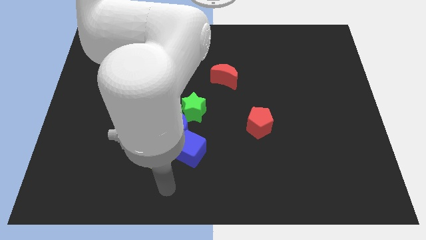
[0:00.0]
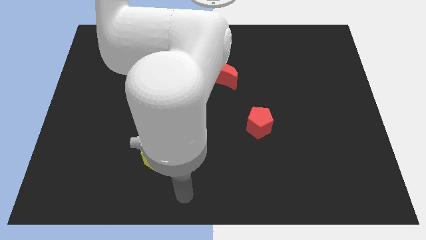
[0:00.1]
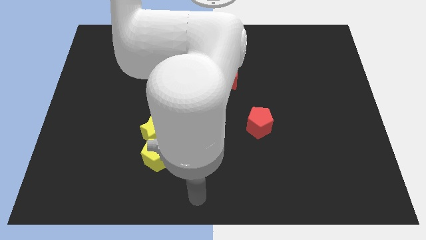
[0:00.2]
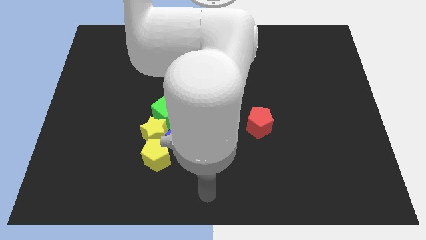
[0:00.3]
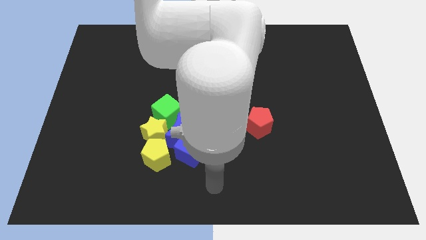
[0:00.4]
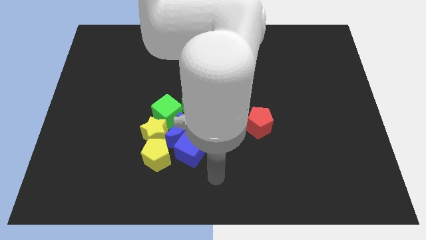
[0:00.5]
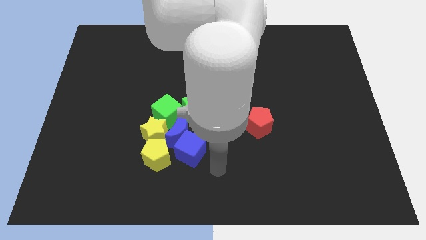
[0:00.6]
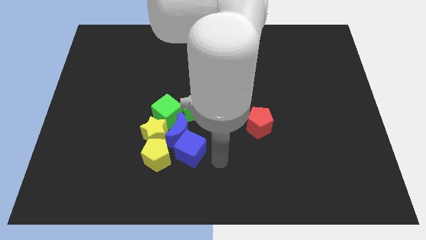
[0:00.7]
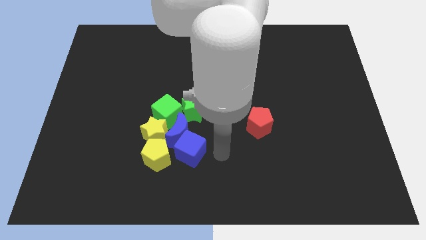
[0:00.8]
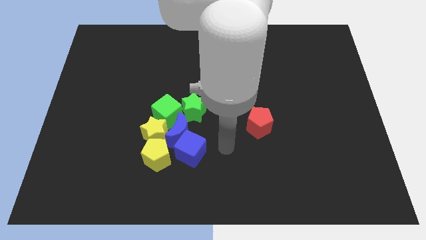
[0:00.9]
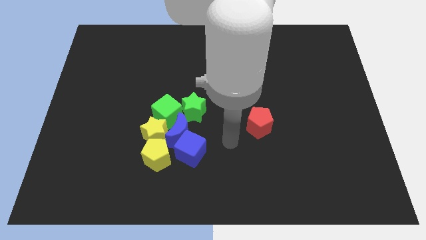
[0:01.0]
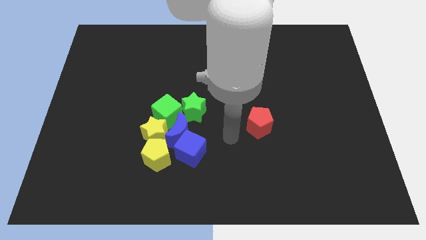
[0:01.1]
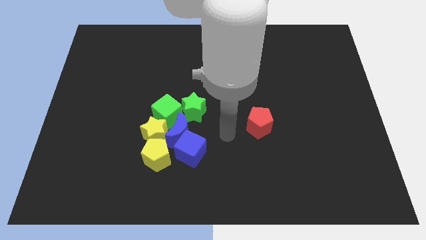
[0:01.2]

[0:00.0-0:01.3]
slide the pointer to the left of red pentagon

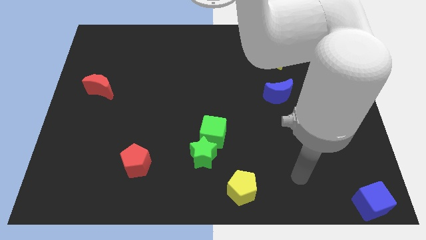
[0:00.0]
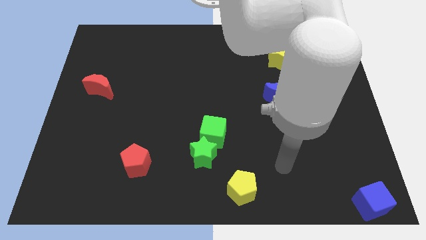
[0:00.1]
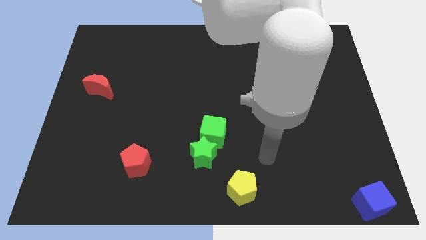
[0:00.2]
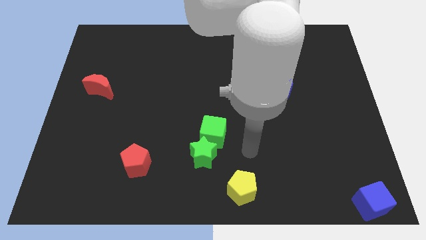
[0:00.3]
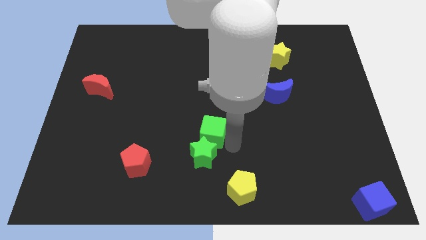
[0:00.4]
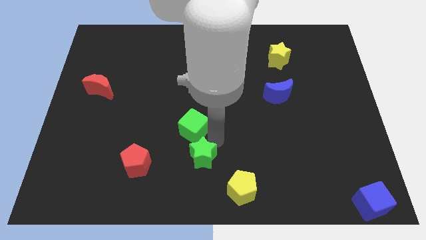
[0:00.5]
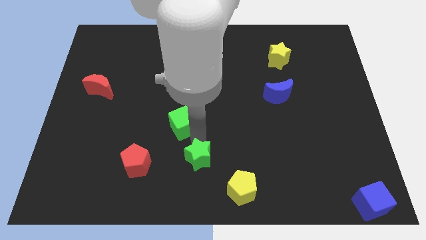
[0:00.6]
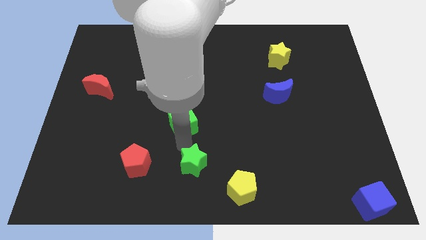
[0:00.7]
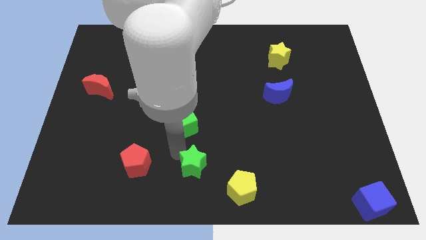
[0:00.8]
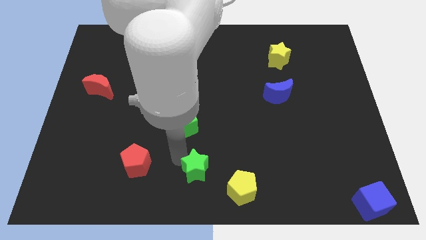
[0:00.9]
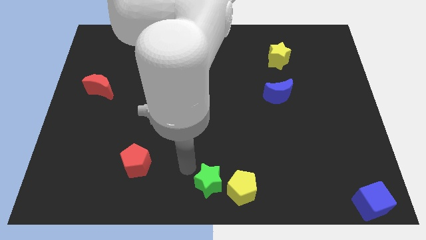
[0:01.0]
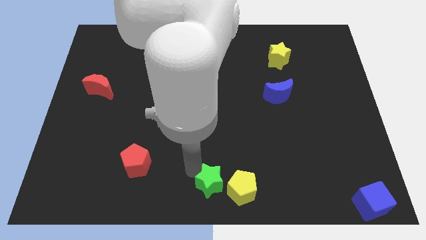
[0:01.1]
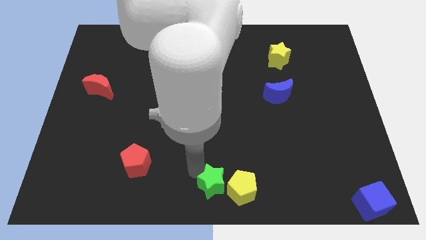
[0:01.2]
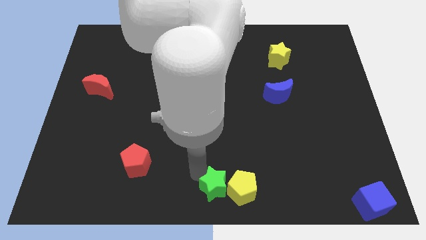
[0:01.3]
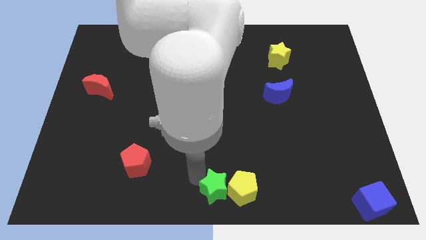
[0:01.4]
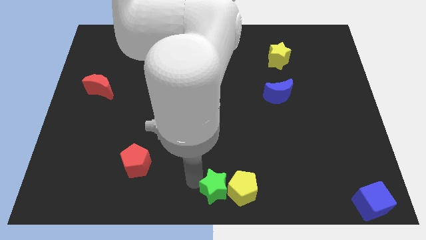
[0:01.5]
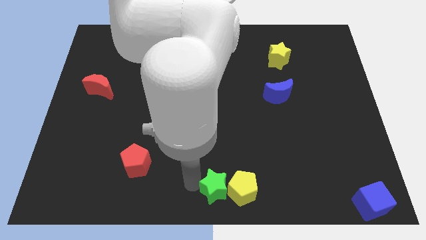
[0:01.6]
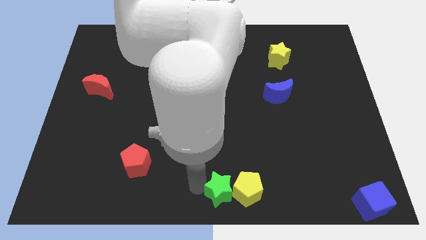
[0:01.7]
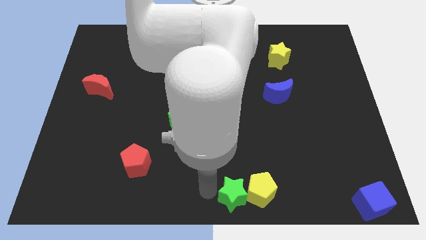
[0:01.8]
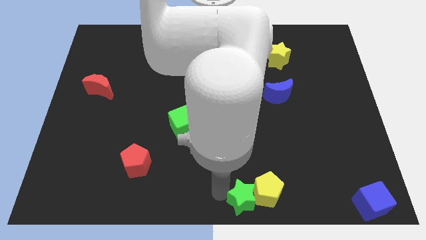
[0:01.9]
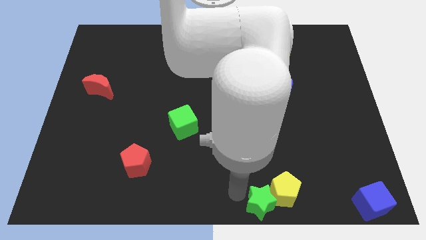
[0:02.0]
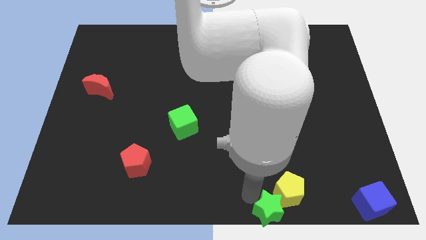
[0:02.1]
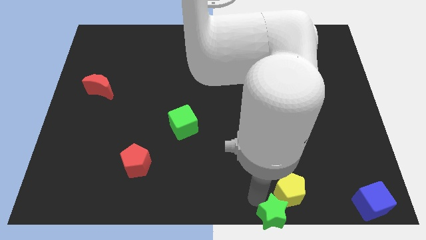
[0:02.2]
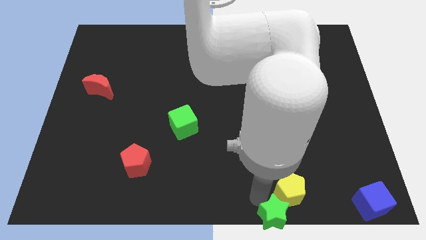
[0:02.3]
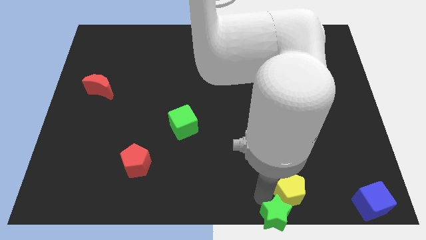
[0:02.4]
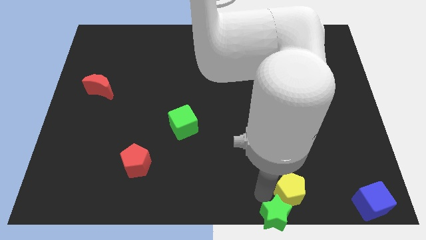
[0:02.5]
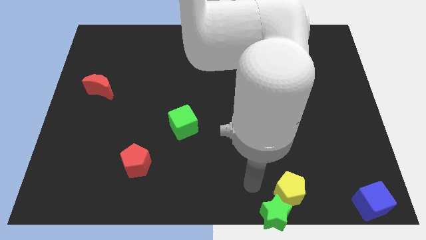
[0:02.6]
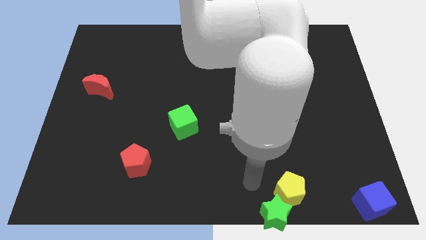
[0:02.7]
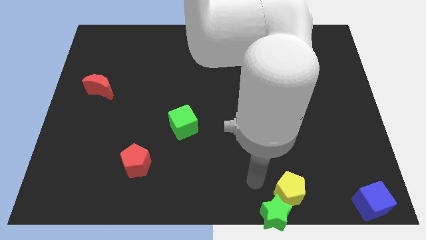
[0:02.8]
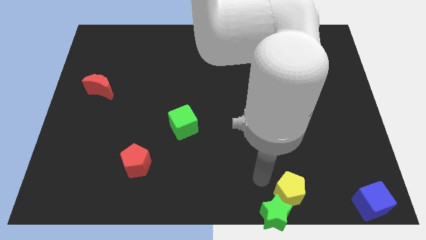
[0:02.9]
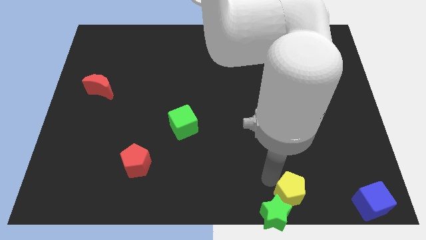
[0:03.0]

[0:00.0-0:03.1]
separate the green star from the green cube

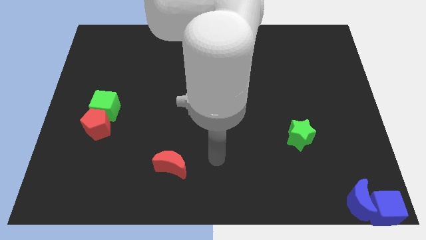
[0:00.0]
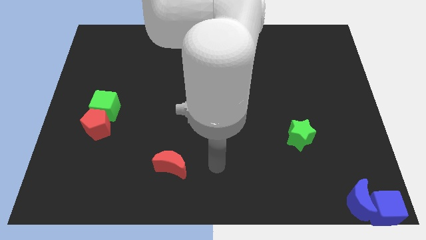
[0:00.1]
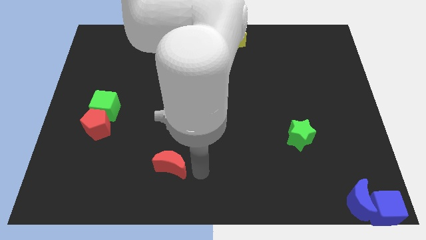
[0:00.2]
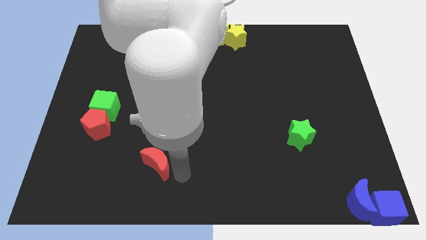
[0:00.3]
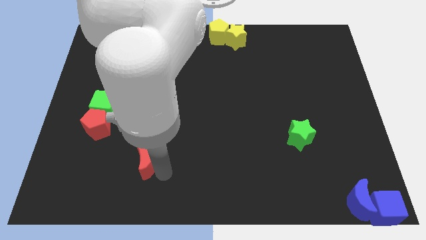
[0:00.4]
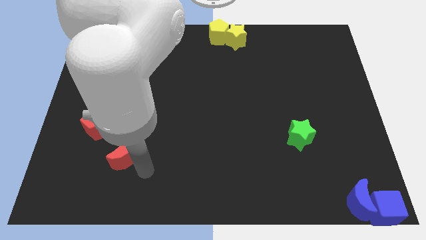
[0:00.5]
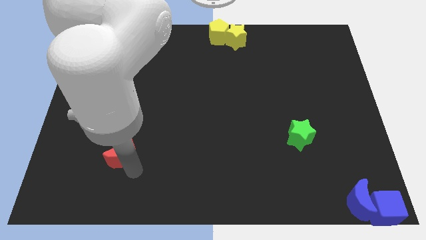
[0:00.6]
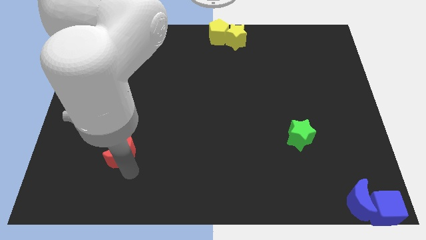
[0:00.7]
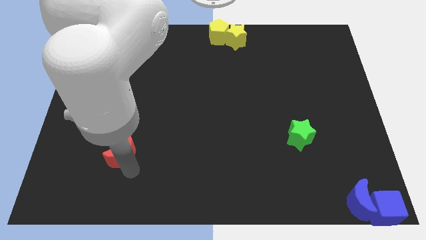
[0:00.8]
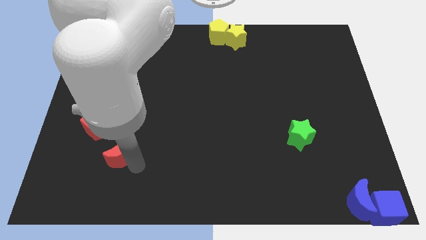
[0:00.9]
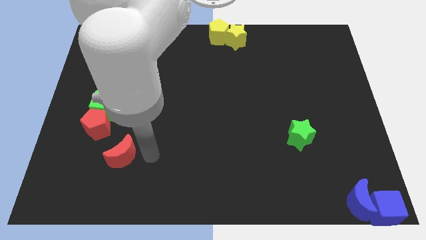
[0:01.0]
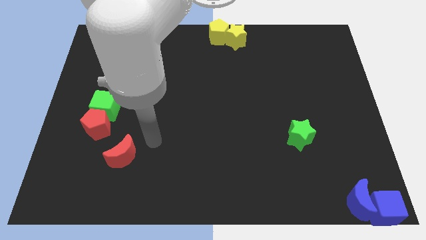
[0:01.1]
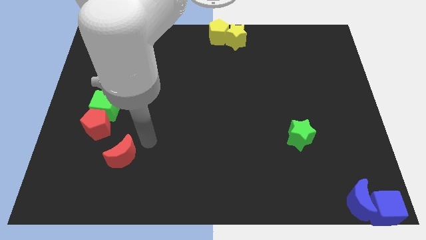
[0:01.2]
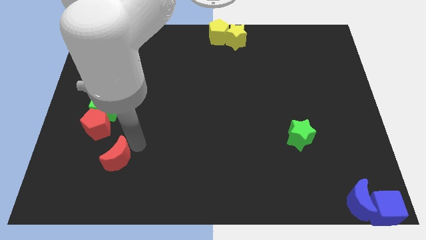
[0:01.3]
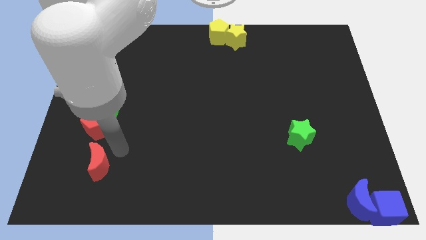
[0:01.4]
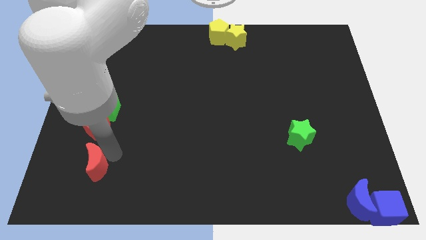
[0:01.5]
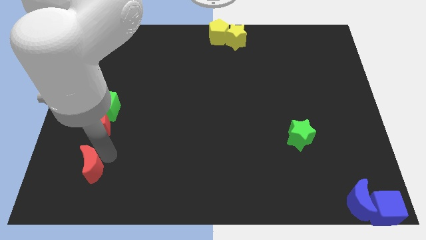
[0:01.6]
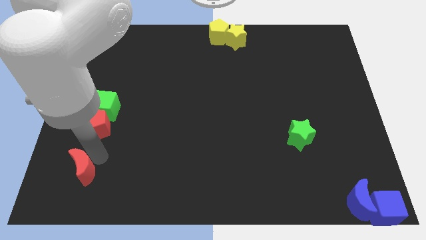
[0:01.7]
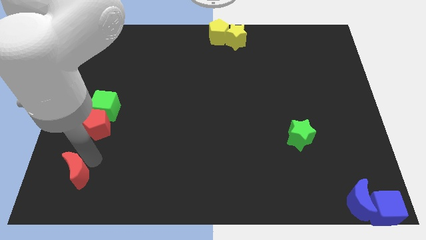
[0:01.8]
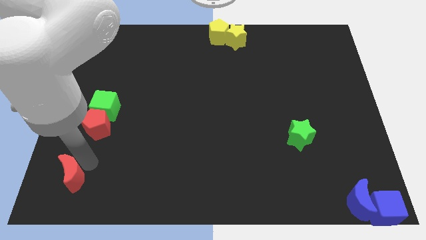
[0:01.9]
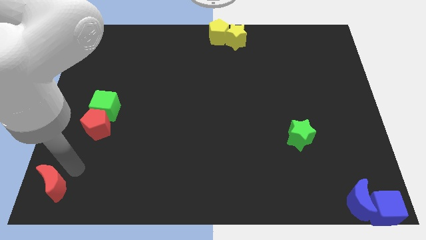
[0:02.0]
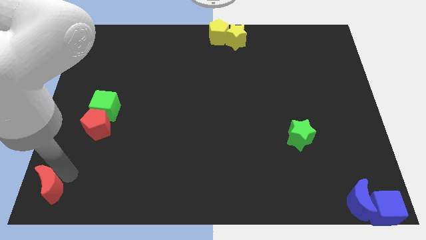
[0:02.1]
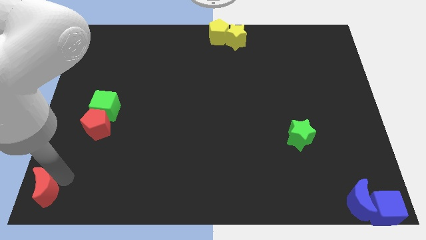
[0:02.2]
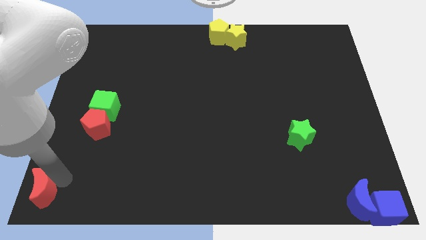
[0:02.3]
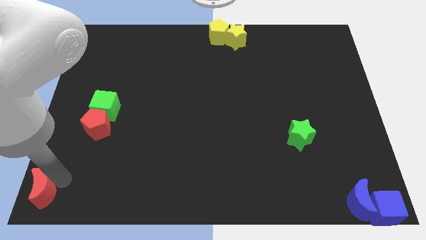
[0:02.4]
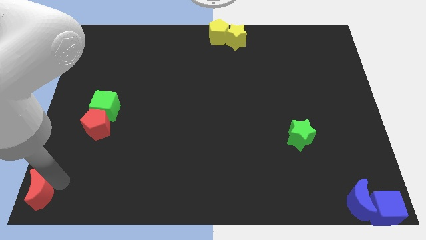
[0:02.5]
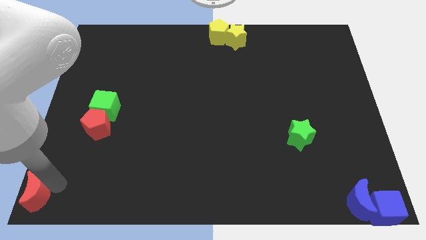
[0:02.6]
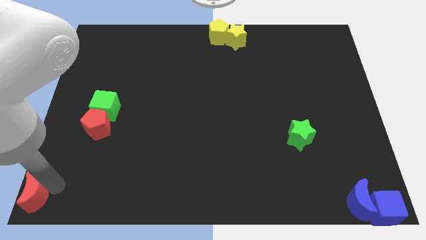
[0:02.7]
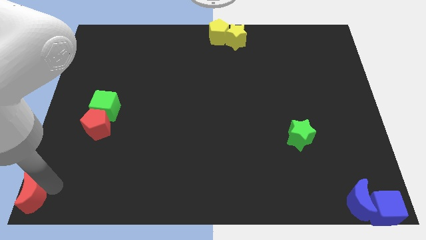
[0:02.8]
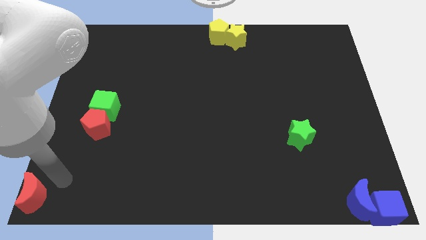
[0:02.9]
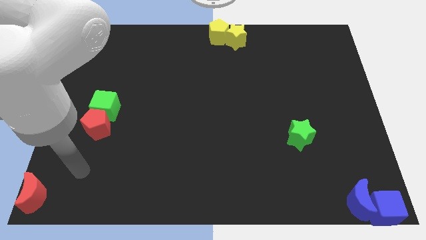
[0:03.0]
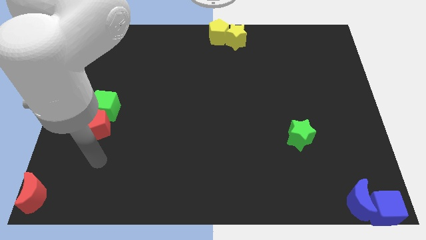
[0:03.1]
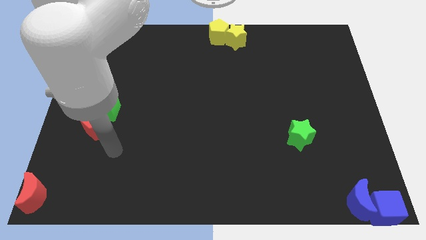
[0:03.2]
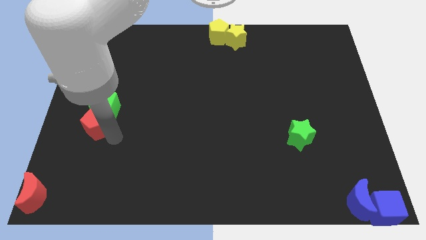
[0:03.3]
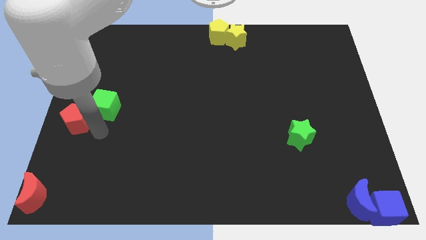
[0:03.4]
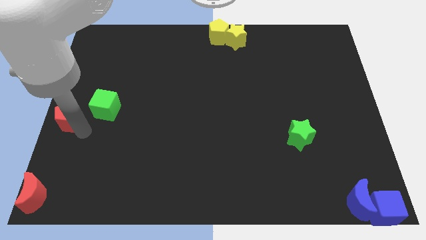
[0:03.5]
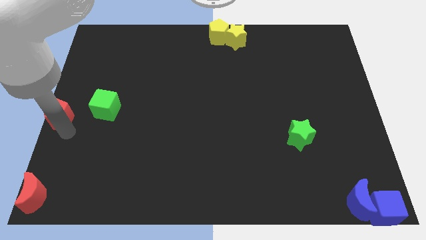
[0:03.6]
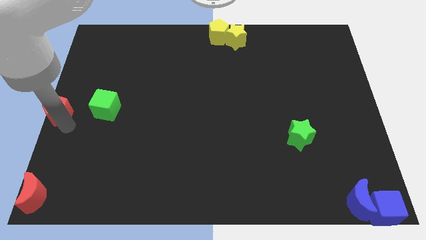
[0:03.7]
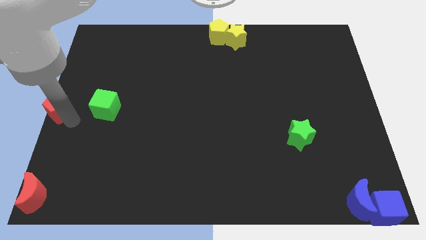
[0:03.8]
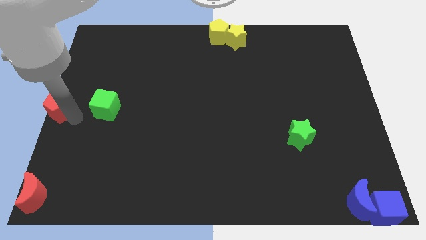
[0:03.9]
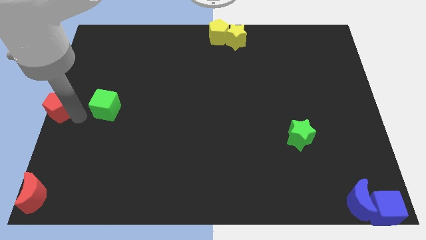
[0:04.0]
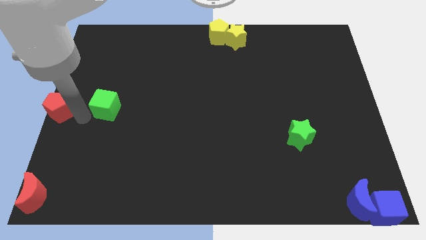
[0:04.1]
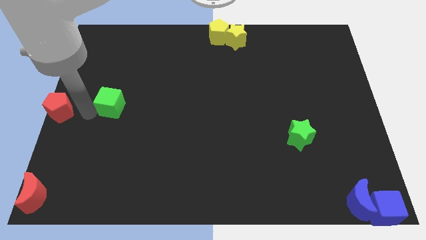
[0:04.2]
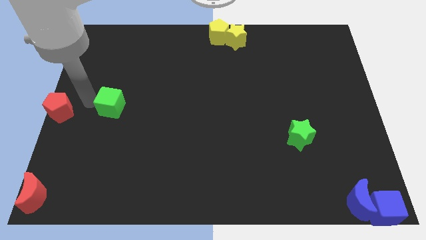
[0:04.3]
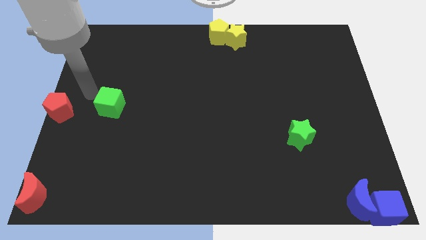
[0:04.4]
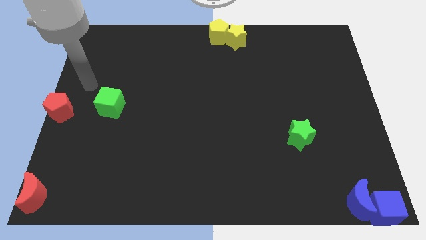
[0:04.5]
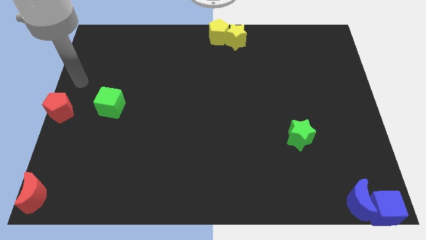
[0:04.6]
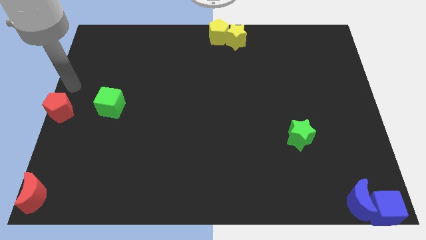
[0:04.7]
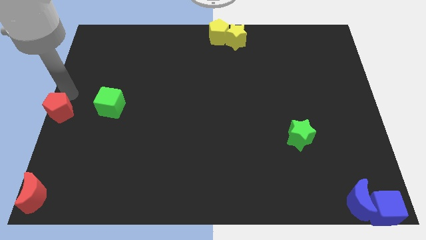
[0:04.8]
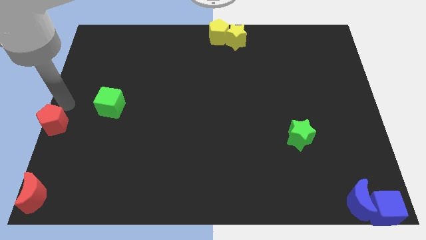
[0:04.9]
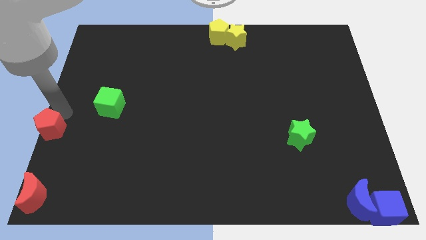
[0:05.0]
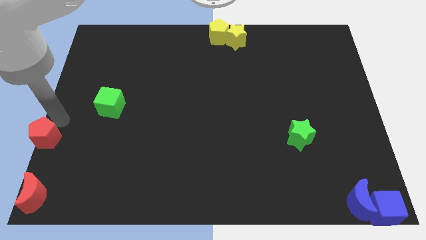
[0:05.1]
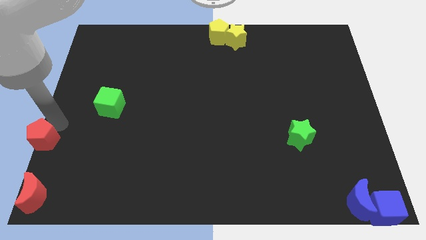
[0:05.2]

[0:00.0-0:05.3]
put the red crescent at the bottom left corner
